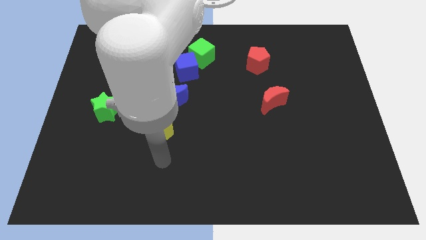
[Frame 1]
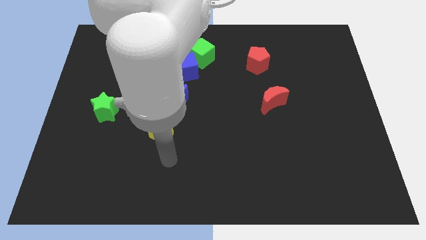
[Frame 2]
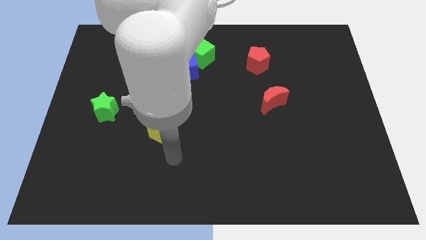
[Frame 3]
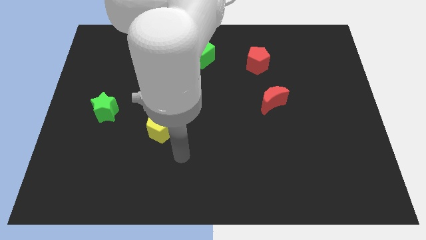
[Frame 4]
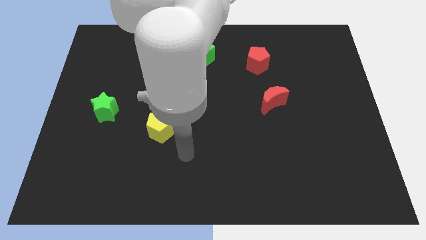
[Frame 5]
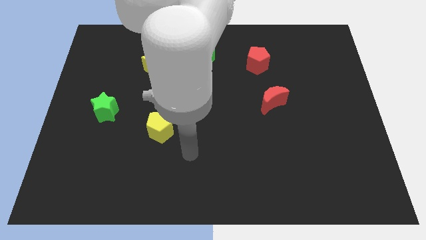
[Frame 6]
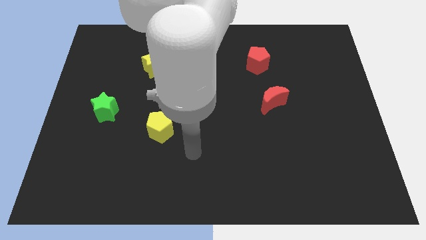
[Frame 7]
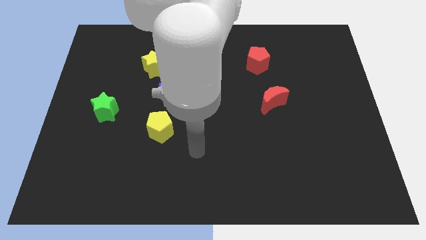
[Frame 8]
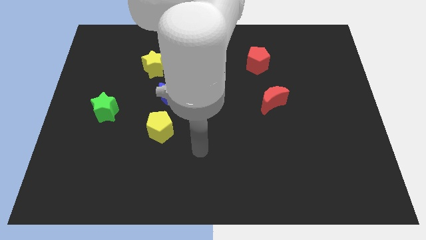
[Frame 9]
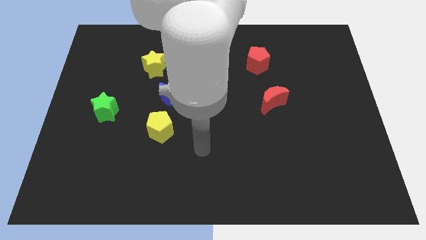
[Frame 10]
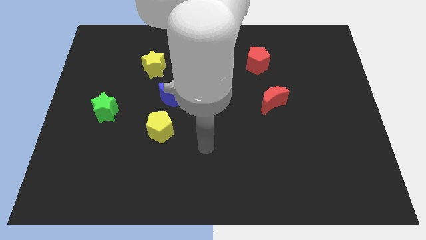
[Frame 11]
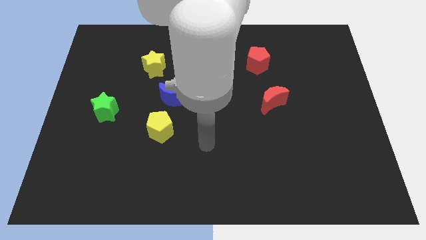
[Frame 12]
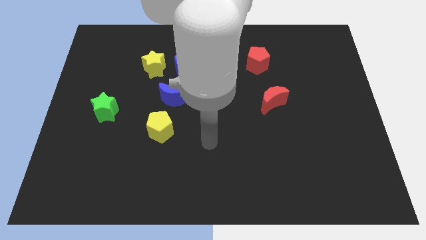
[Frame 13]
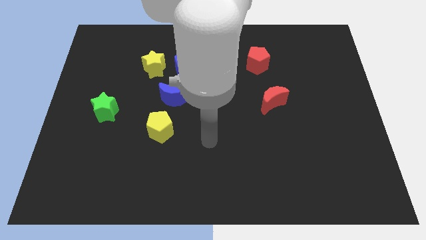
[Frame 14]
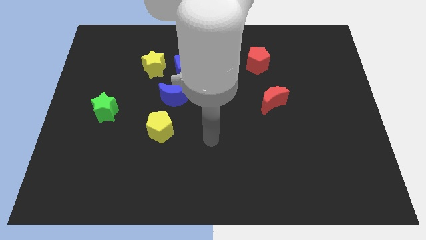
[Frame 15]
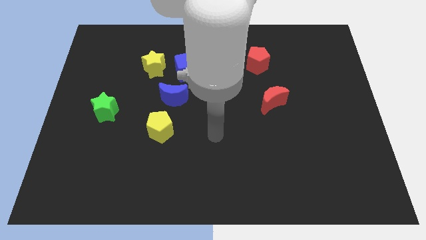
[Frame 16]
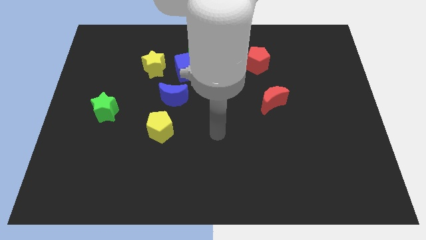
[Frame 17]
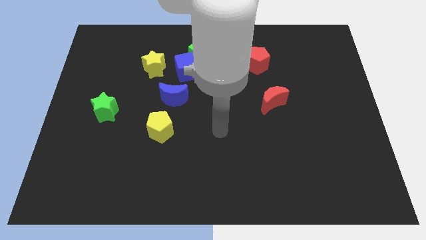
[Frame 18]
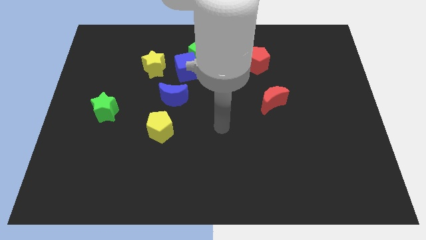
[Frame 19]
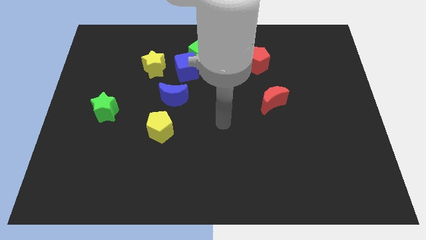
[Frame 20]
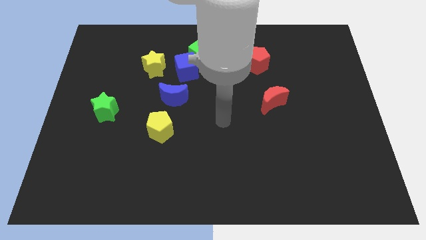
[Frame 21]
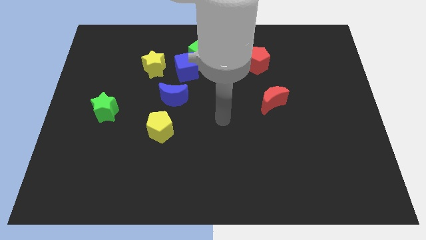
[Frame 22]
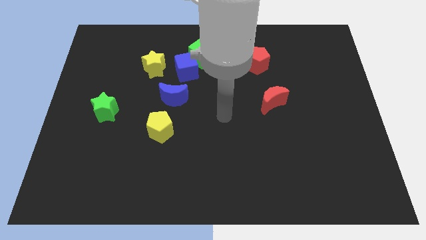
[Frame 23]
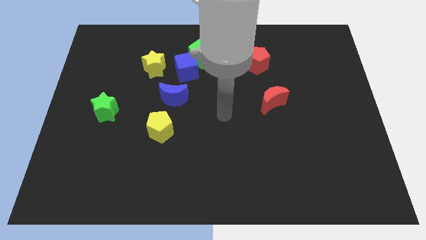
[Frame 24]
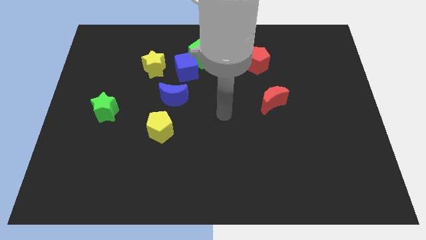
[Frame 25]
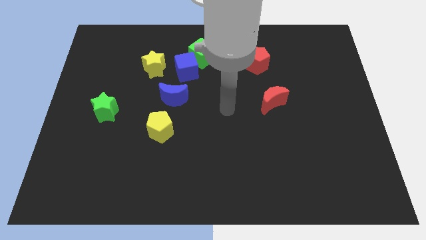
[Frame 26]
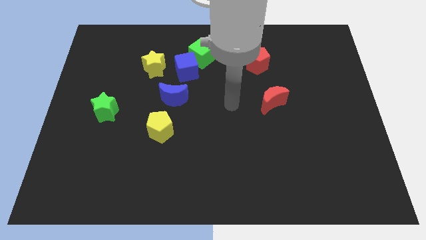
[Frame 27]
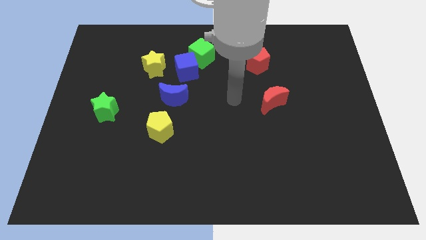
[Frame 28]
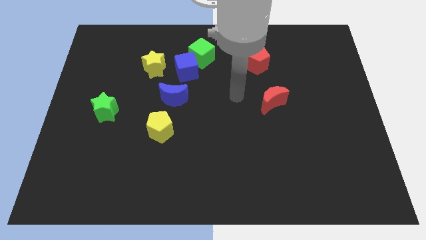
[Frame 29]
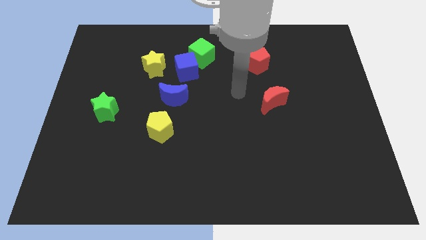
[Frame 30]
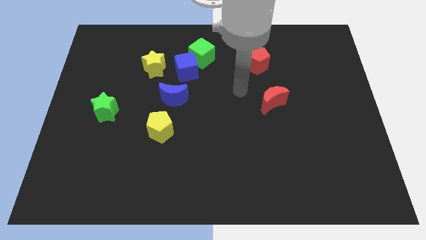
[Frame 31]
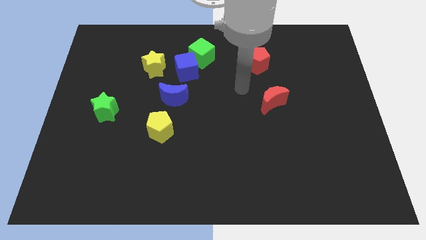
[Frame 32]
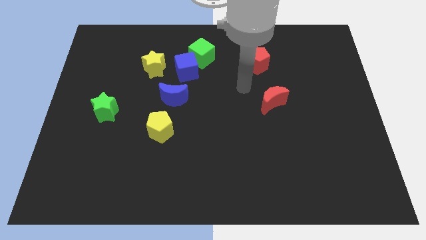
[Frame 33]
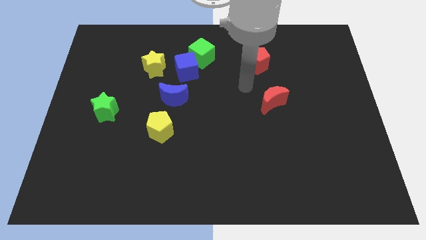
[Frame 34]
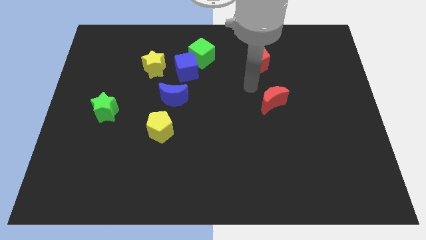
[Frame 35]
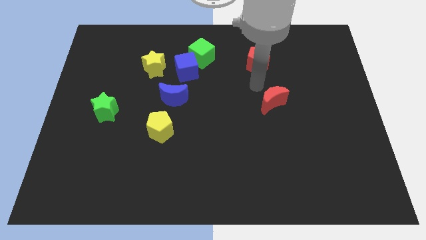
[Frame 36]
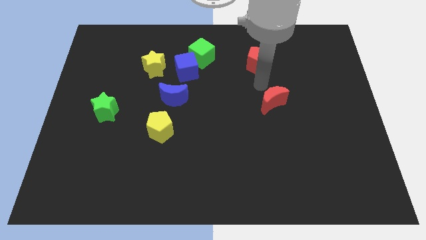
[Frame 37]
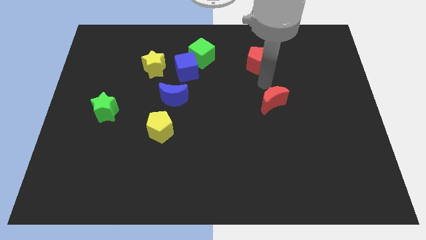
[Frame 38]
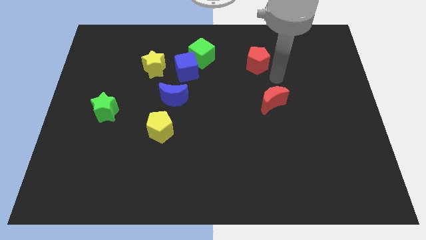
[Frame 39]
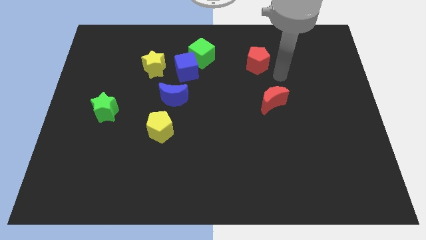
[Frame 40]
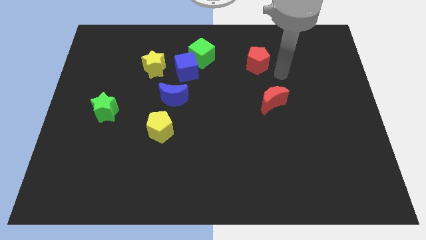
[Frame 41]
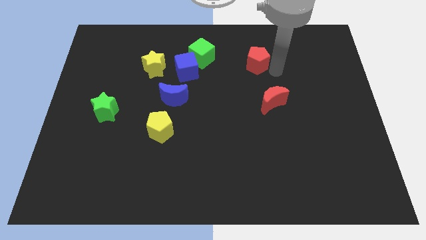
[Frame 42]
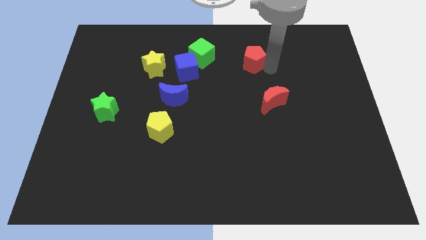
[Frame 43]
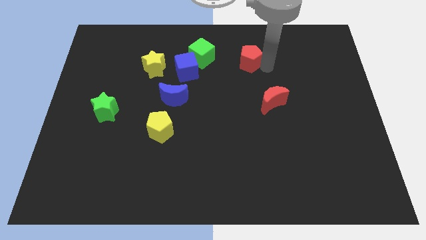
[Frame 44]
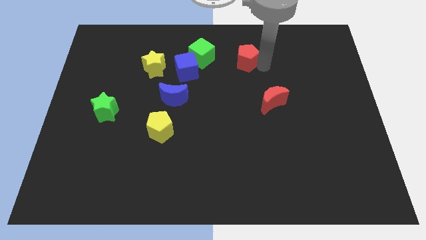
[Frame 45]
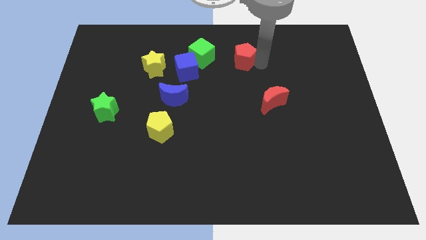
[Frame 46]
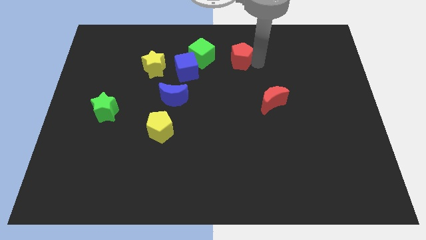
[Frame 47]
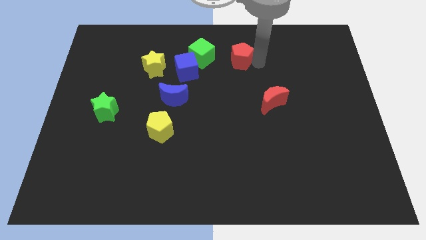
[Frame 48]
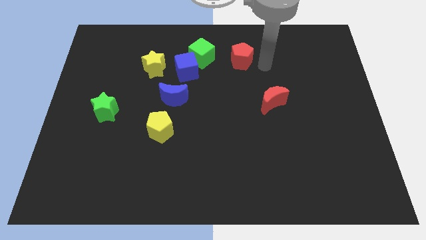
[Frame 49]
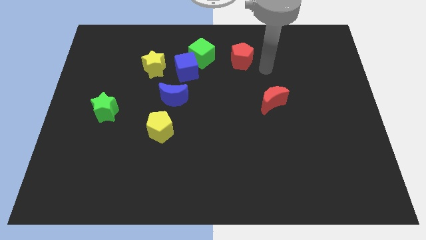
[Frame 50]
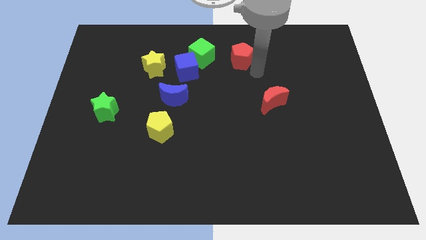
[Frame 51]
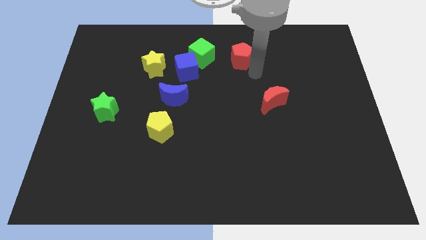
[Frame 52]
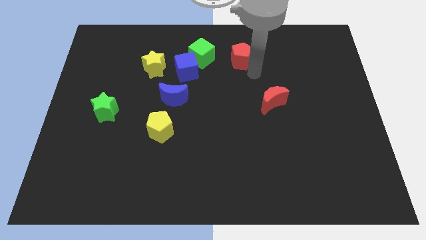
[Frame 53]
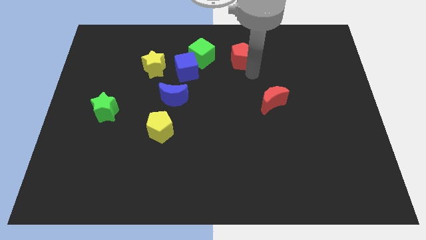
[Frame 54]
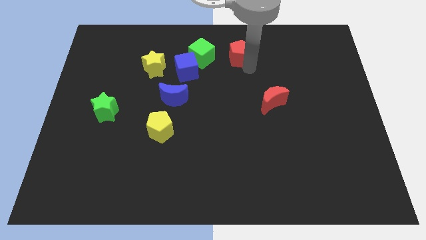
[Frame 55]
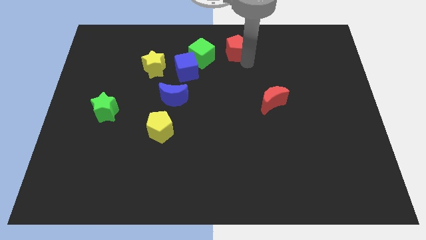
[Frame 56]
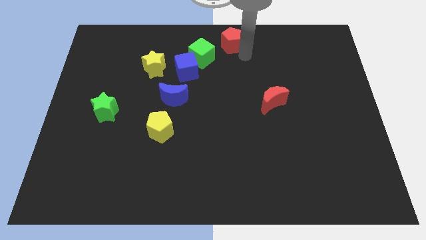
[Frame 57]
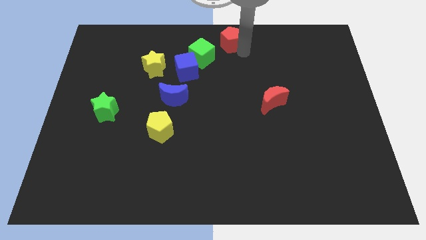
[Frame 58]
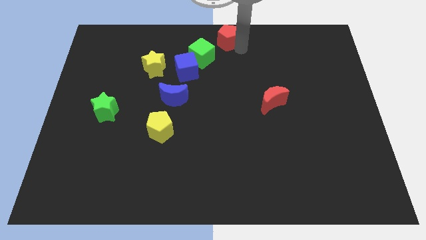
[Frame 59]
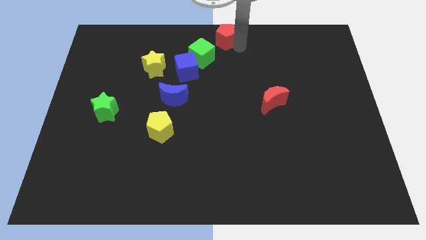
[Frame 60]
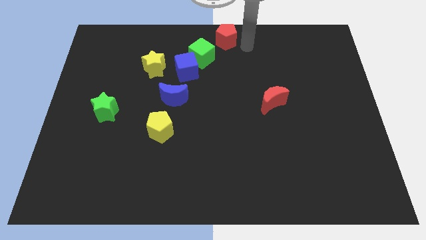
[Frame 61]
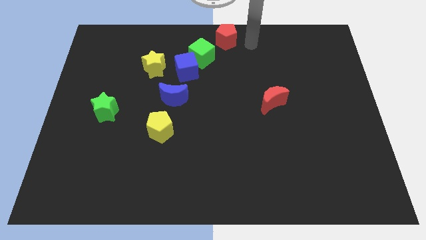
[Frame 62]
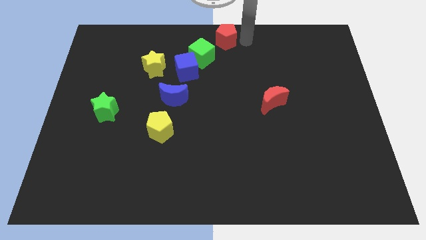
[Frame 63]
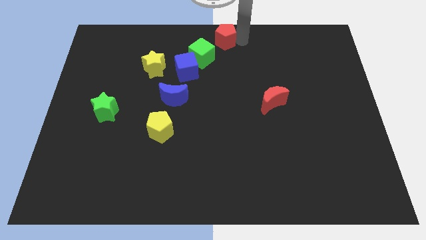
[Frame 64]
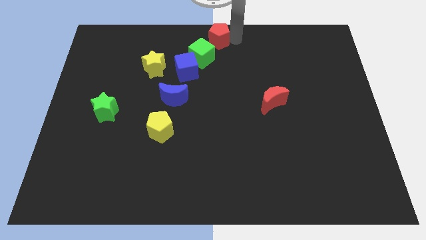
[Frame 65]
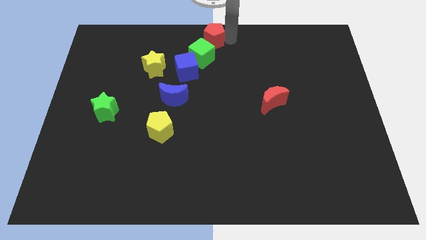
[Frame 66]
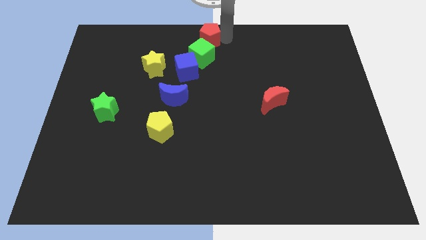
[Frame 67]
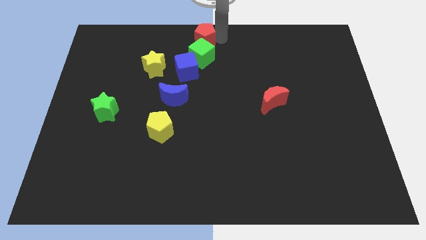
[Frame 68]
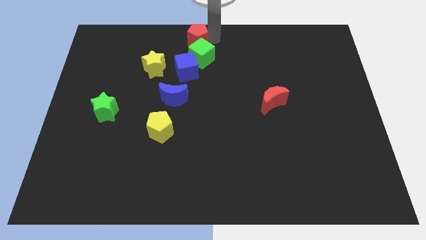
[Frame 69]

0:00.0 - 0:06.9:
move the red pentagon above the green cube

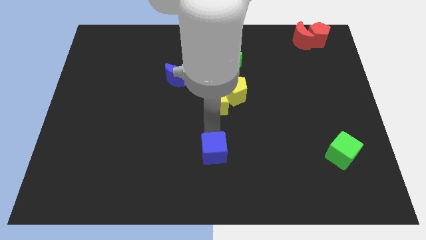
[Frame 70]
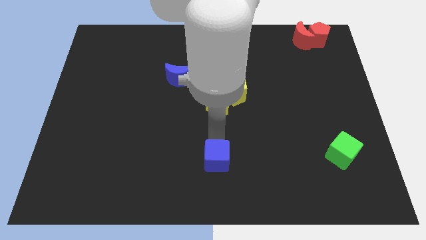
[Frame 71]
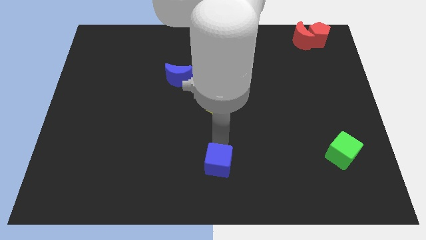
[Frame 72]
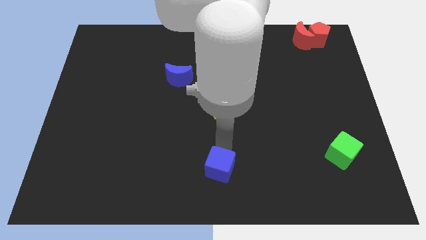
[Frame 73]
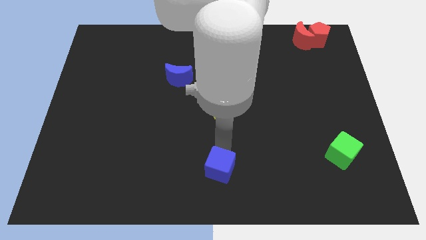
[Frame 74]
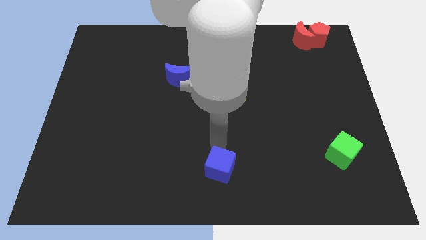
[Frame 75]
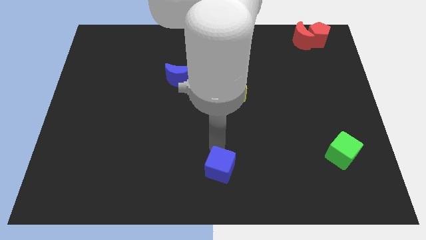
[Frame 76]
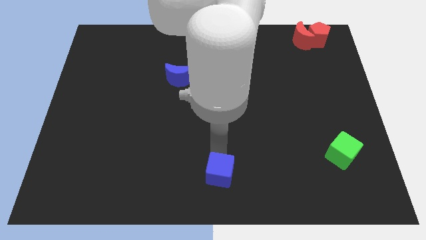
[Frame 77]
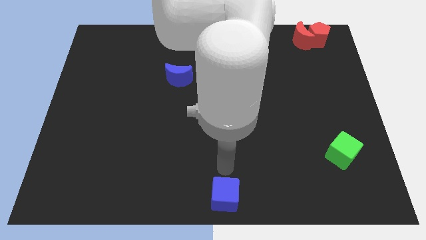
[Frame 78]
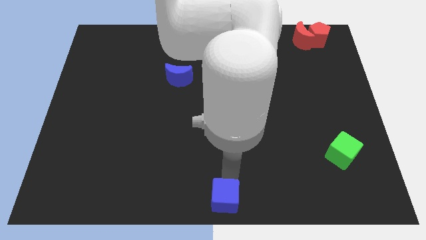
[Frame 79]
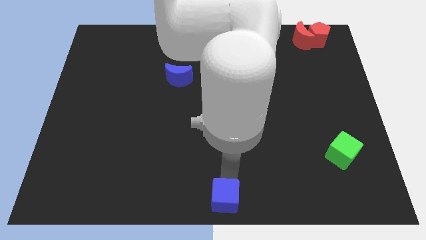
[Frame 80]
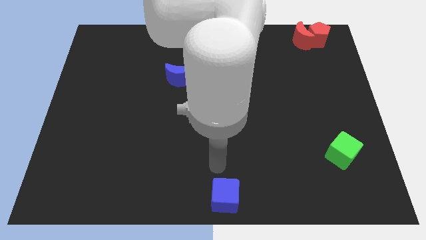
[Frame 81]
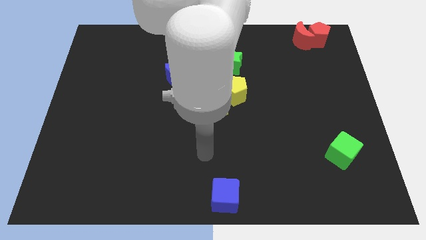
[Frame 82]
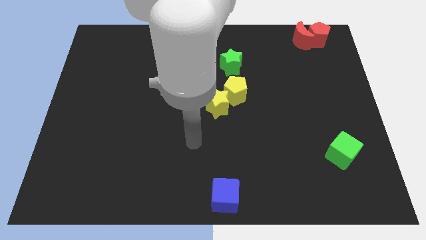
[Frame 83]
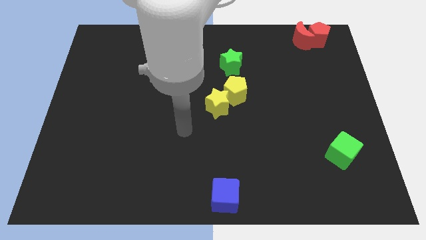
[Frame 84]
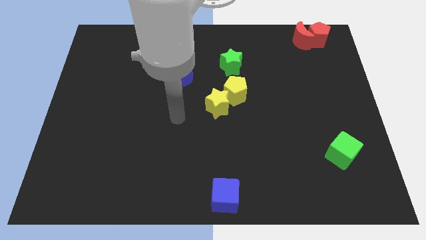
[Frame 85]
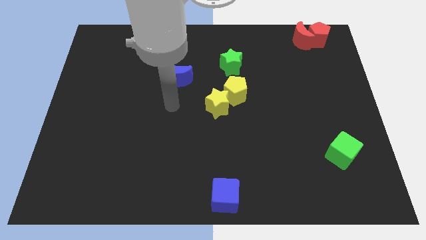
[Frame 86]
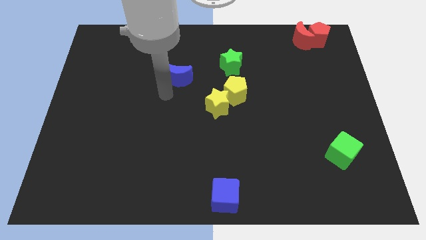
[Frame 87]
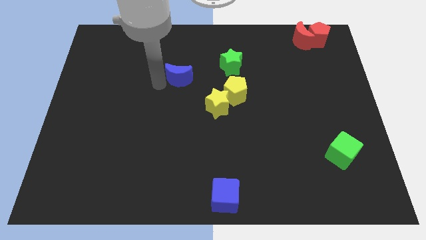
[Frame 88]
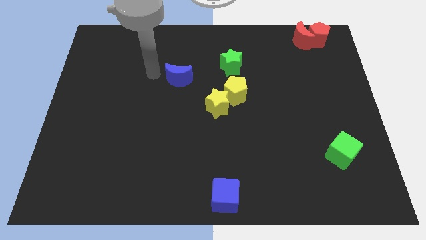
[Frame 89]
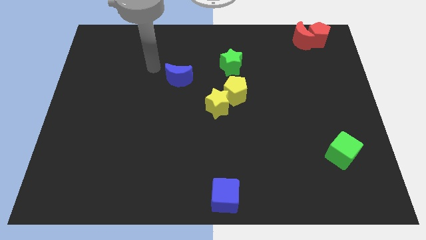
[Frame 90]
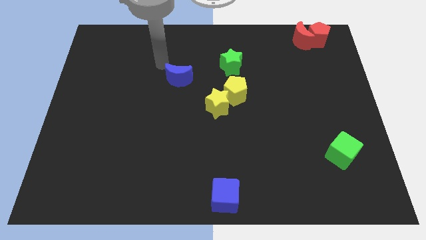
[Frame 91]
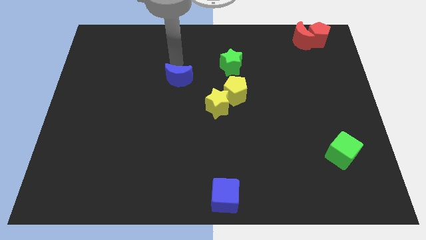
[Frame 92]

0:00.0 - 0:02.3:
push the blue cube to the bottom center of the board
